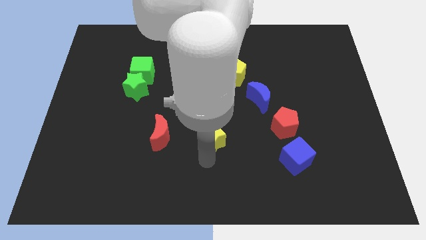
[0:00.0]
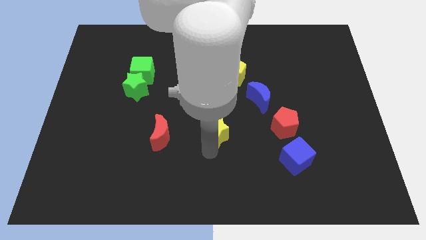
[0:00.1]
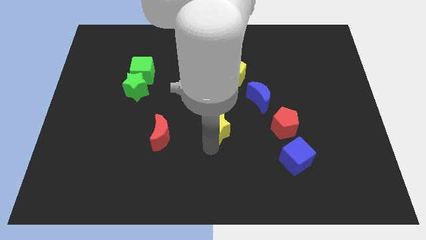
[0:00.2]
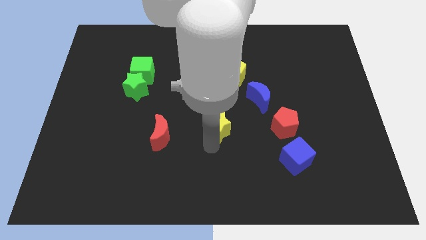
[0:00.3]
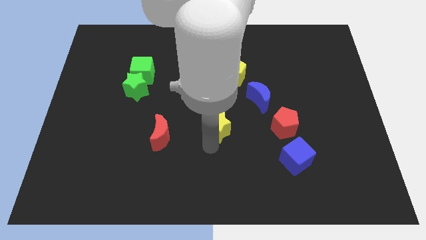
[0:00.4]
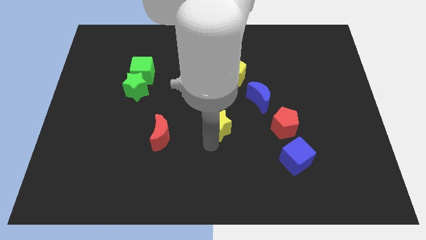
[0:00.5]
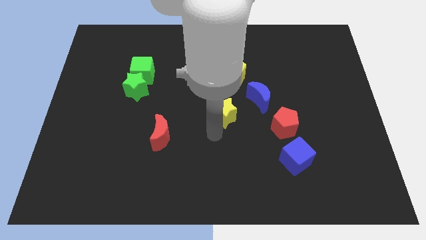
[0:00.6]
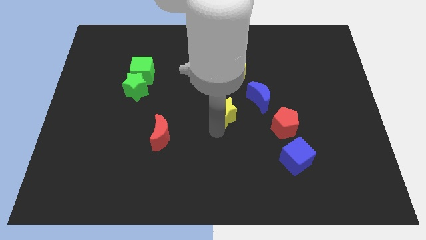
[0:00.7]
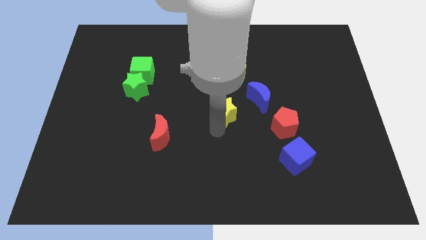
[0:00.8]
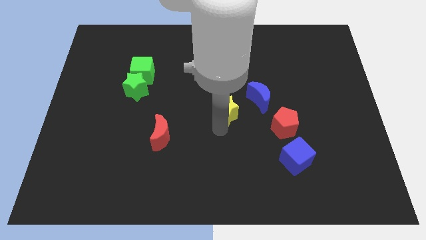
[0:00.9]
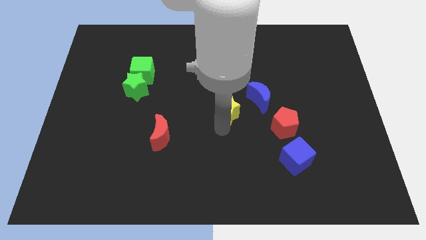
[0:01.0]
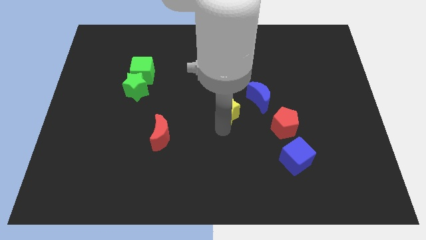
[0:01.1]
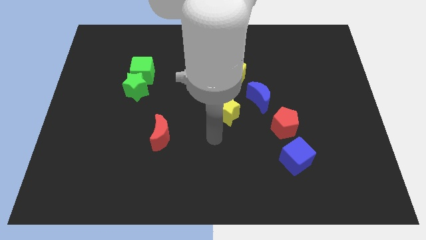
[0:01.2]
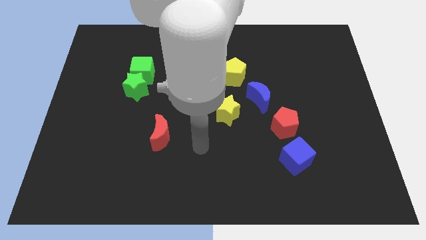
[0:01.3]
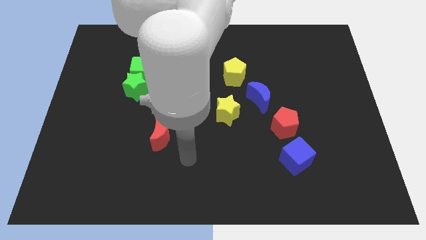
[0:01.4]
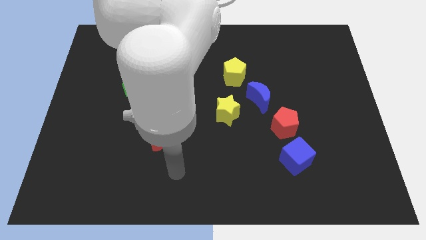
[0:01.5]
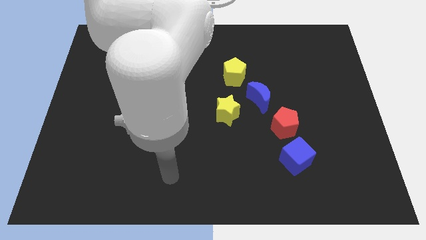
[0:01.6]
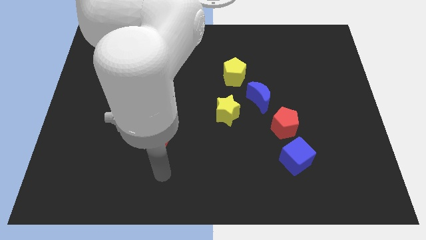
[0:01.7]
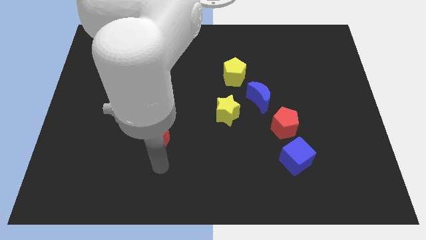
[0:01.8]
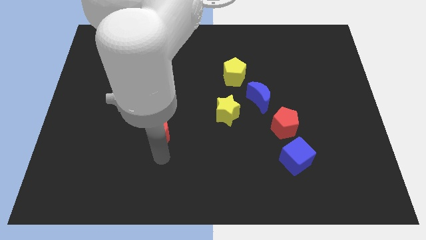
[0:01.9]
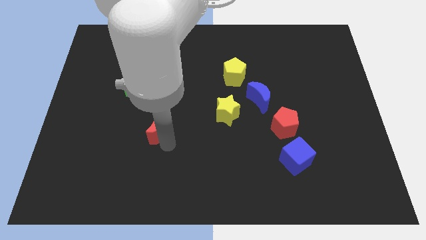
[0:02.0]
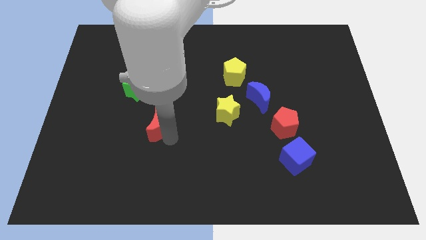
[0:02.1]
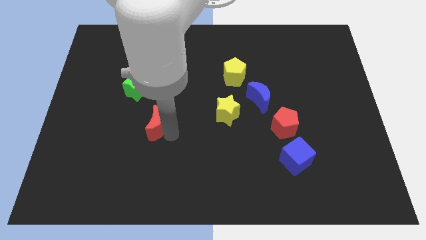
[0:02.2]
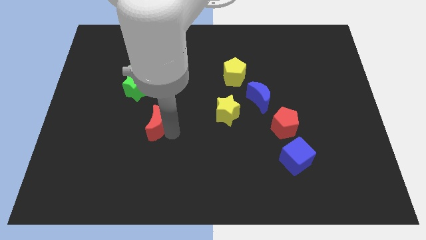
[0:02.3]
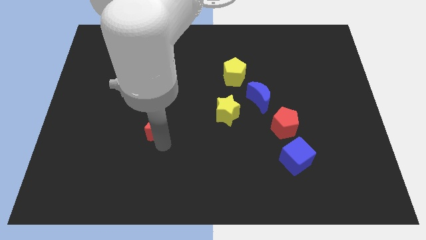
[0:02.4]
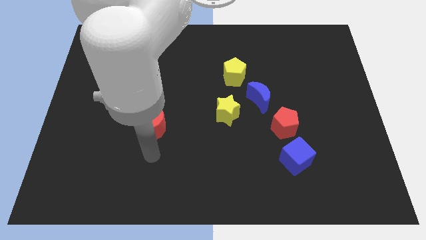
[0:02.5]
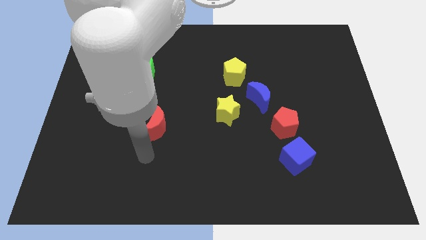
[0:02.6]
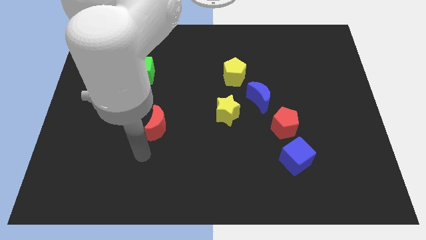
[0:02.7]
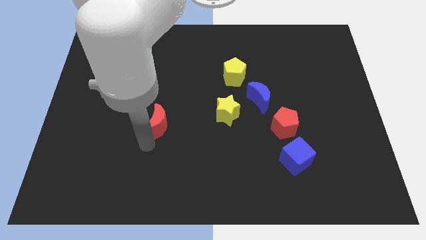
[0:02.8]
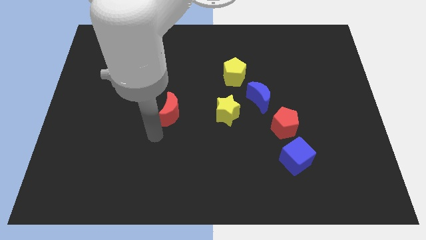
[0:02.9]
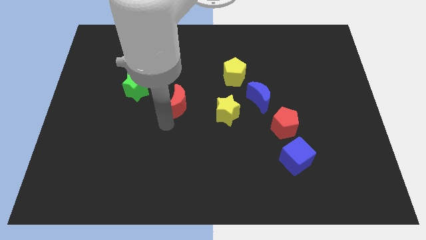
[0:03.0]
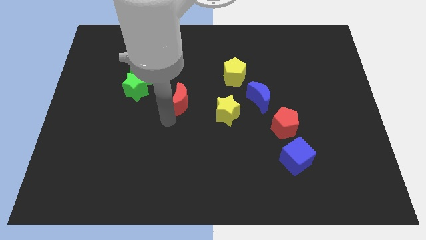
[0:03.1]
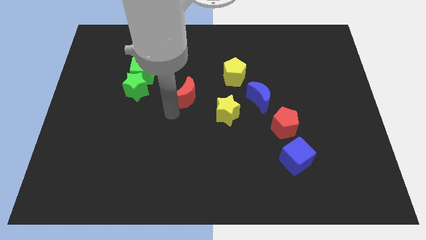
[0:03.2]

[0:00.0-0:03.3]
slide the red crescent to the left of the yellow star

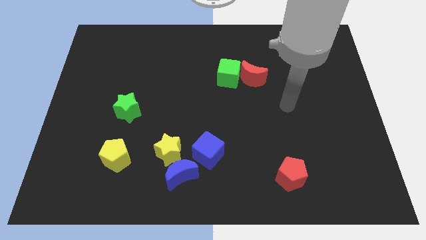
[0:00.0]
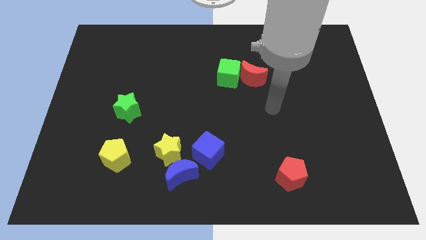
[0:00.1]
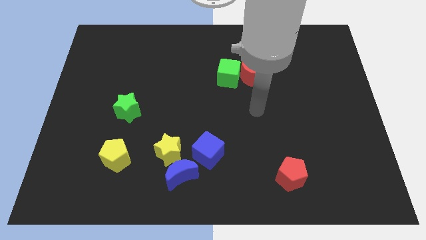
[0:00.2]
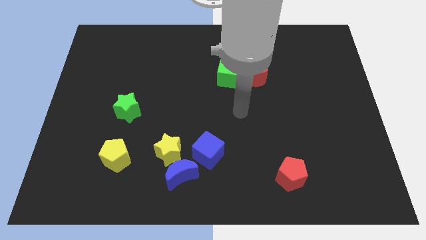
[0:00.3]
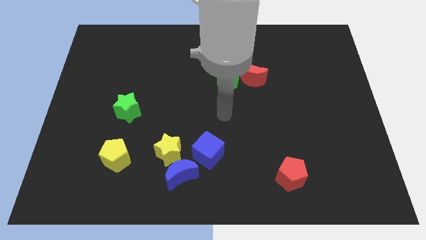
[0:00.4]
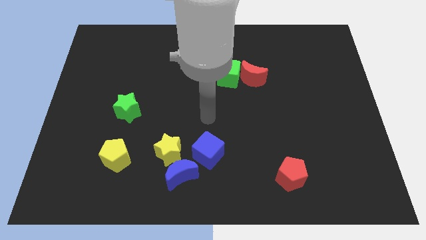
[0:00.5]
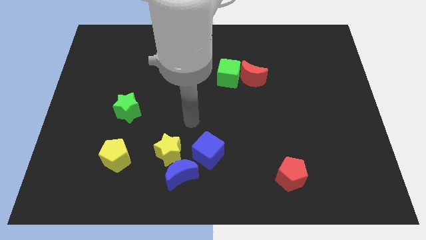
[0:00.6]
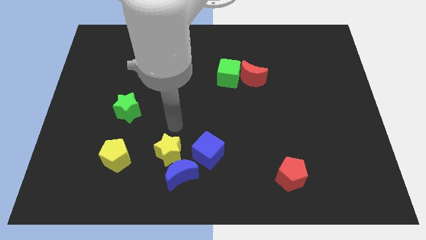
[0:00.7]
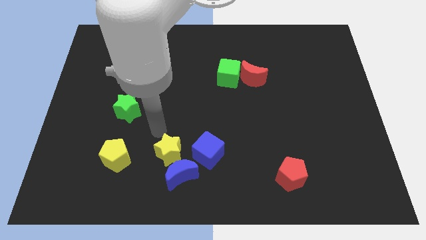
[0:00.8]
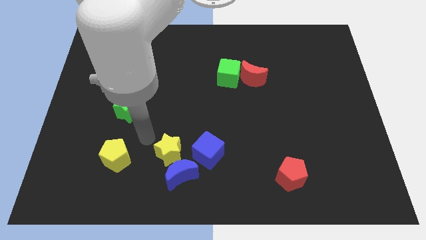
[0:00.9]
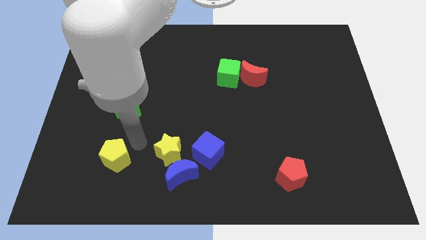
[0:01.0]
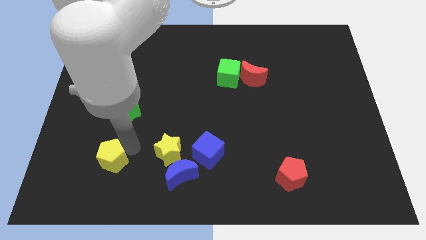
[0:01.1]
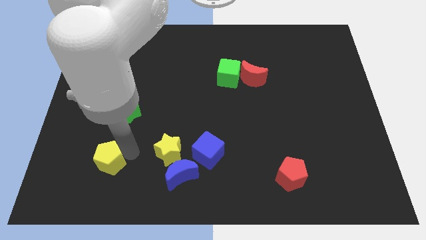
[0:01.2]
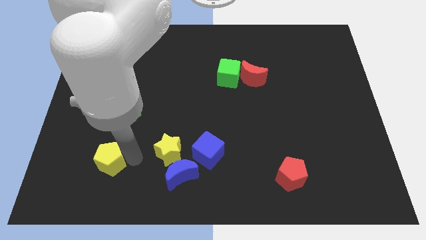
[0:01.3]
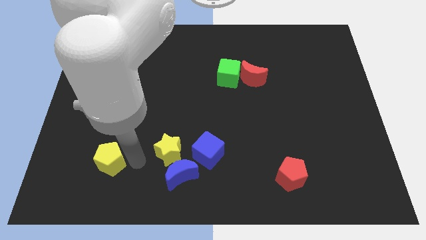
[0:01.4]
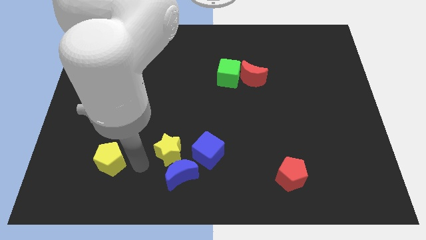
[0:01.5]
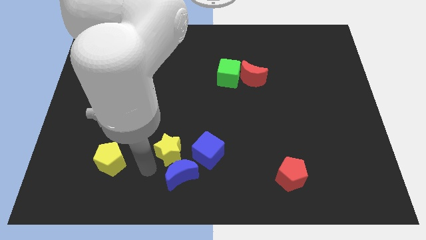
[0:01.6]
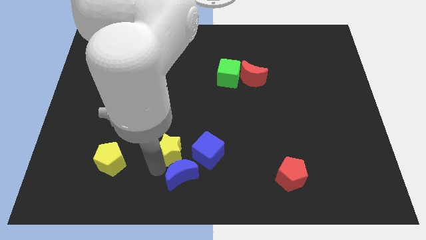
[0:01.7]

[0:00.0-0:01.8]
slightly push the yellow pentagon towards the bottom left corner of the board

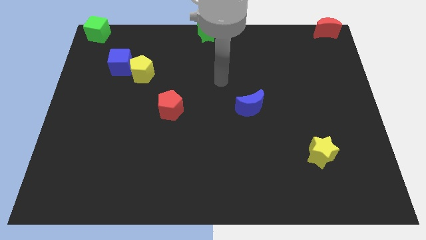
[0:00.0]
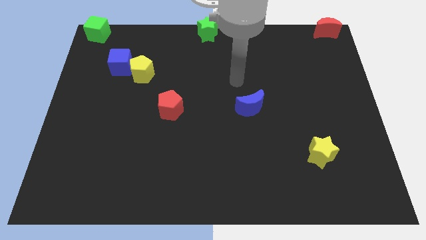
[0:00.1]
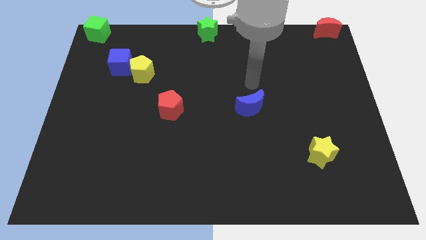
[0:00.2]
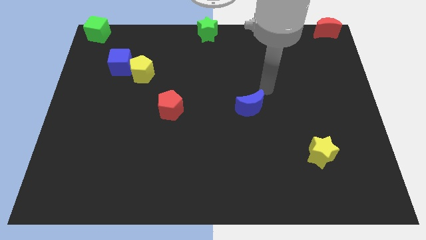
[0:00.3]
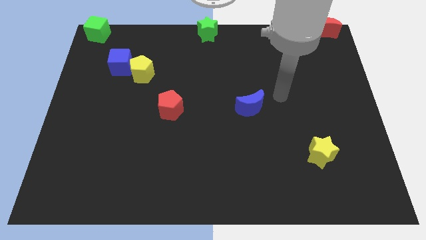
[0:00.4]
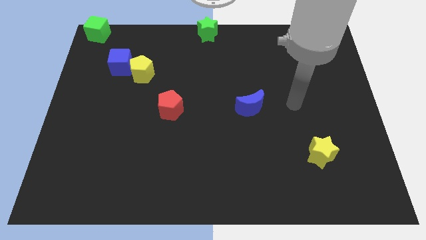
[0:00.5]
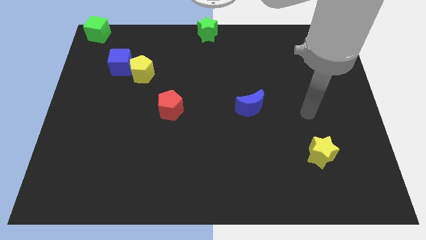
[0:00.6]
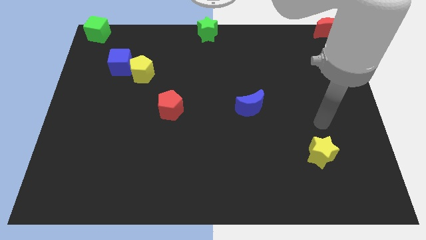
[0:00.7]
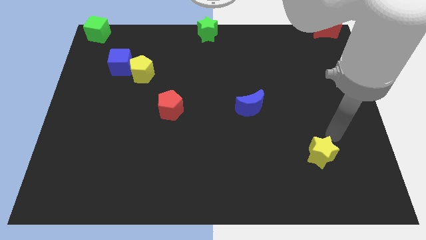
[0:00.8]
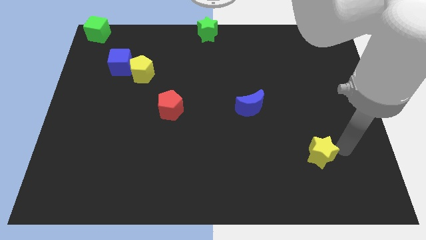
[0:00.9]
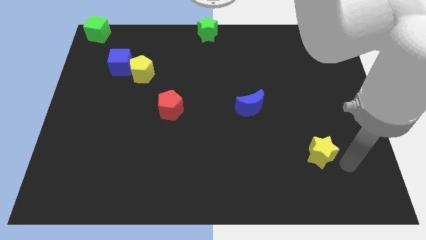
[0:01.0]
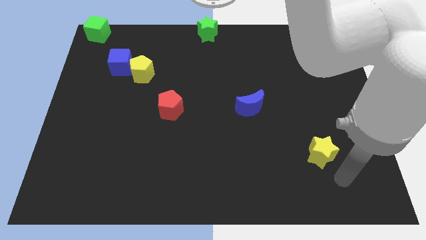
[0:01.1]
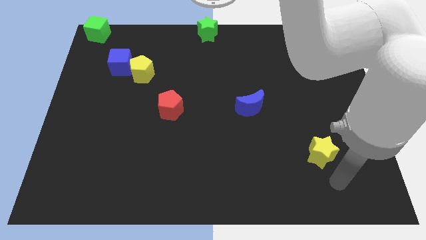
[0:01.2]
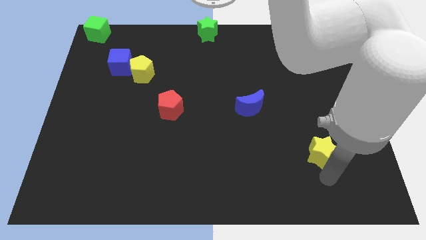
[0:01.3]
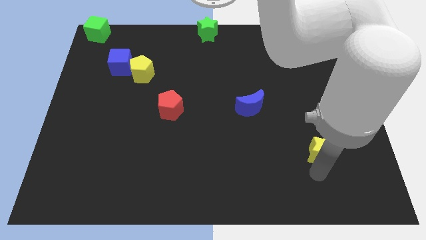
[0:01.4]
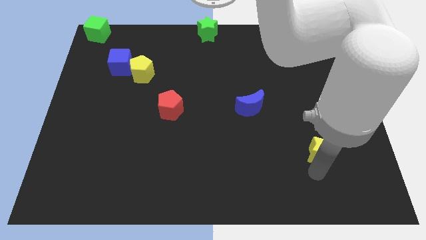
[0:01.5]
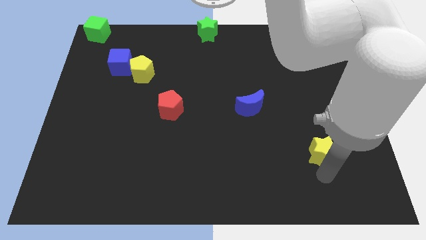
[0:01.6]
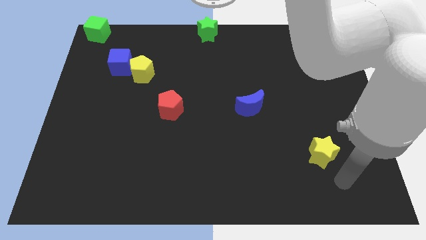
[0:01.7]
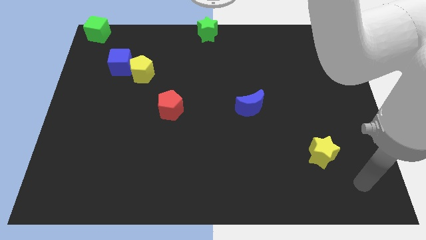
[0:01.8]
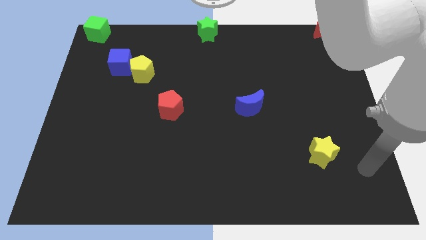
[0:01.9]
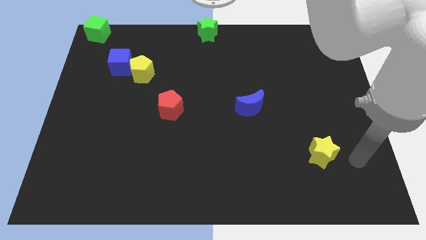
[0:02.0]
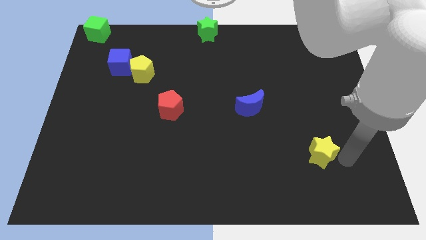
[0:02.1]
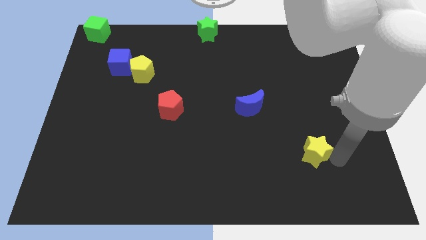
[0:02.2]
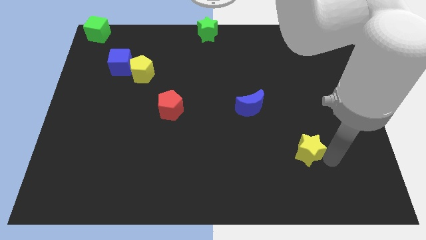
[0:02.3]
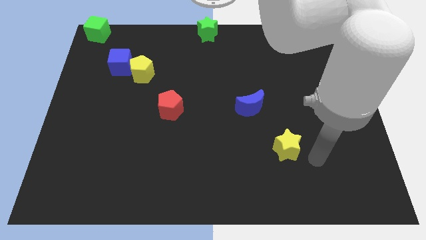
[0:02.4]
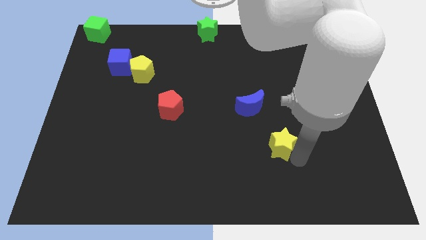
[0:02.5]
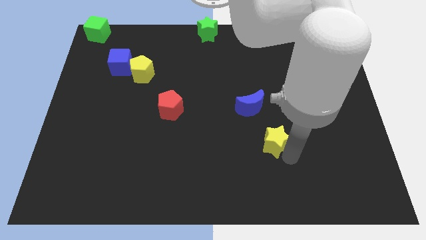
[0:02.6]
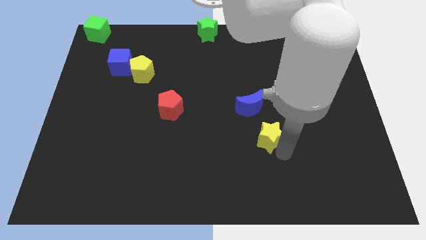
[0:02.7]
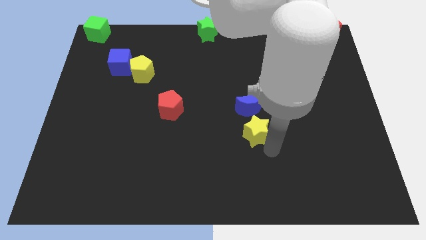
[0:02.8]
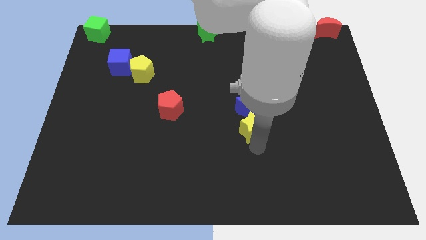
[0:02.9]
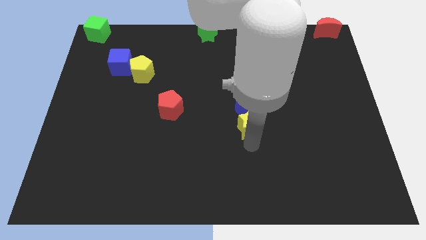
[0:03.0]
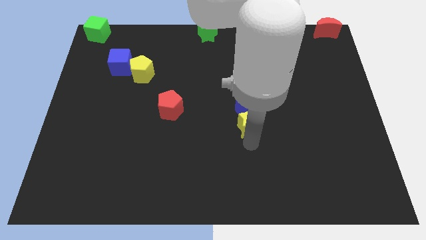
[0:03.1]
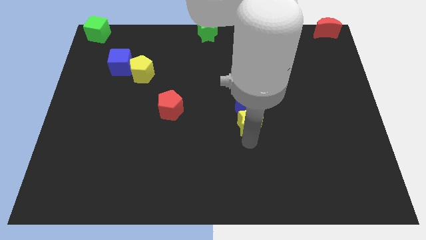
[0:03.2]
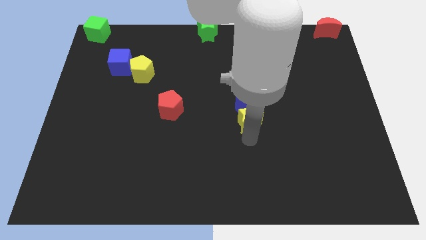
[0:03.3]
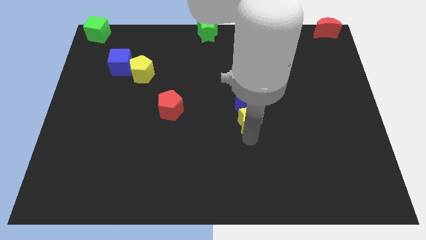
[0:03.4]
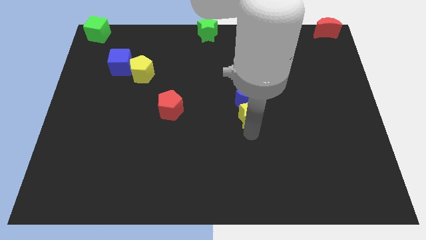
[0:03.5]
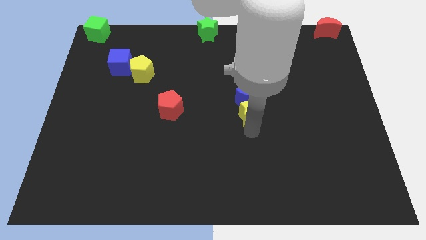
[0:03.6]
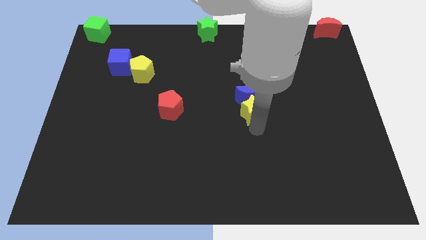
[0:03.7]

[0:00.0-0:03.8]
push yellow star below blue crescent
